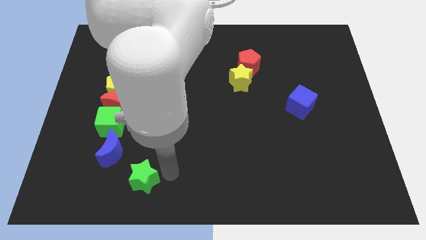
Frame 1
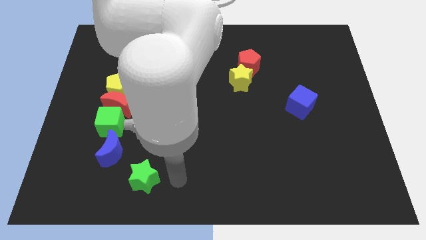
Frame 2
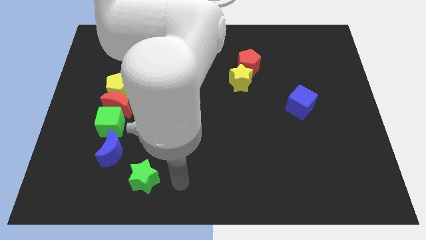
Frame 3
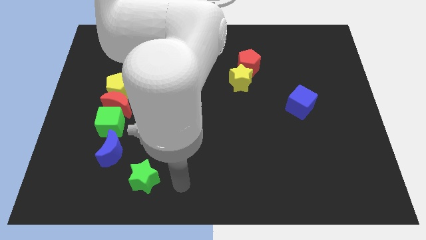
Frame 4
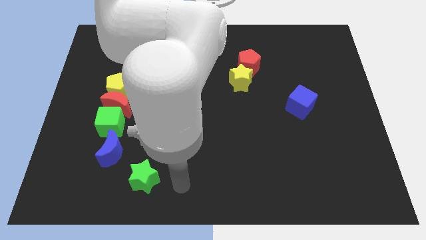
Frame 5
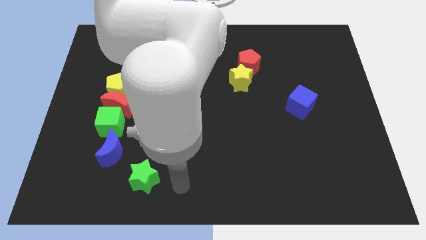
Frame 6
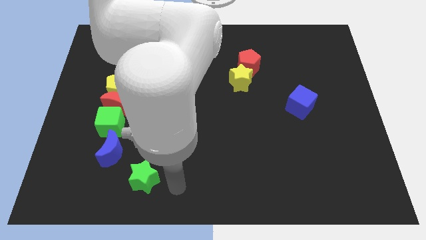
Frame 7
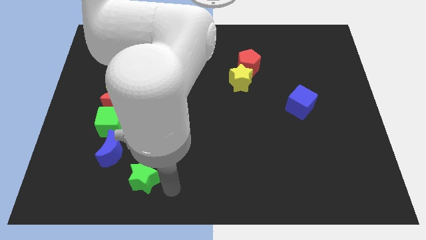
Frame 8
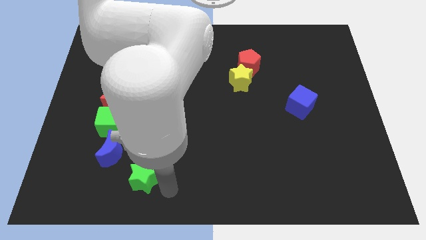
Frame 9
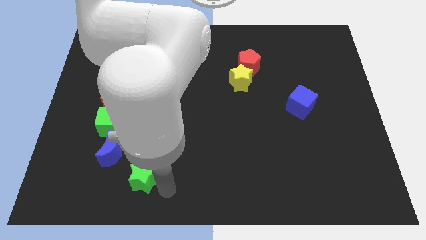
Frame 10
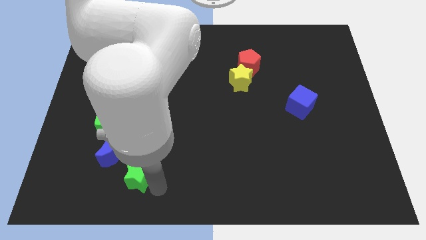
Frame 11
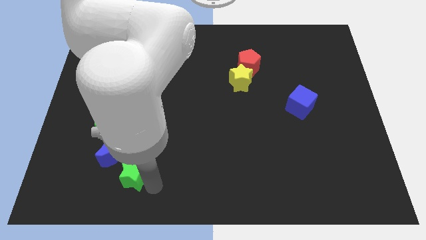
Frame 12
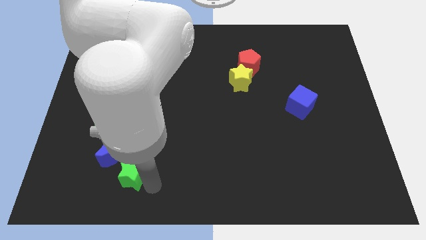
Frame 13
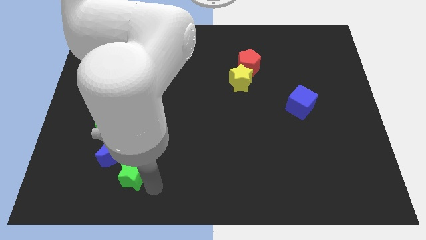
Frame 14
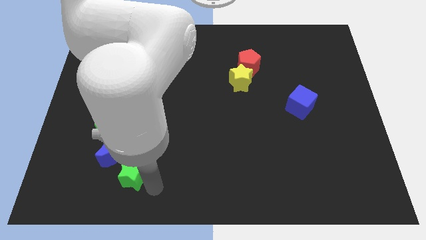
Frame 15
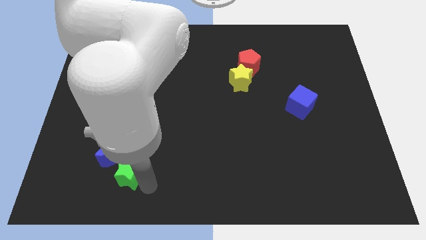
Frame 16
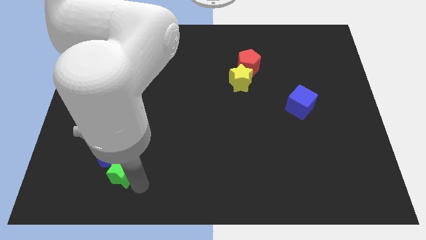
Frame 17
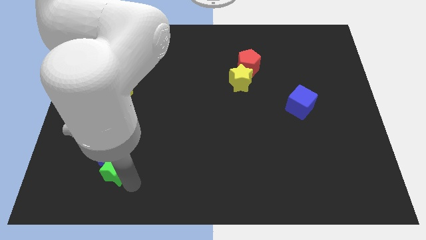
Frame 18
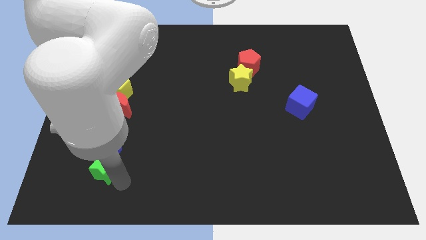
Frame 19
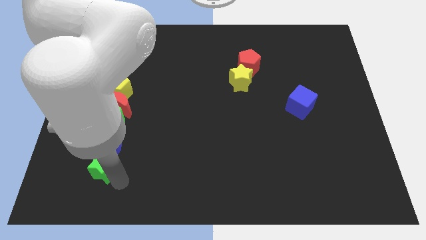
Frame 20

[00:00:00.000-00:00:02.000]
move the green star towards down to the blue crescent

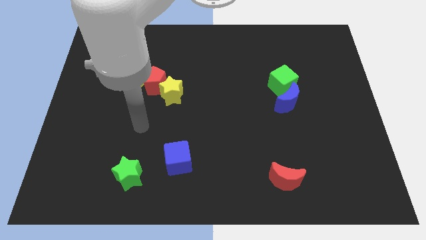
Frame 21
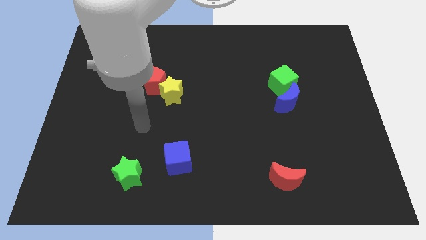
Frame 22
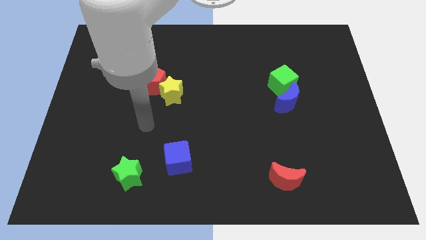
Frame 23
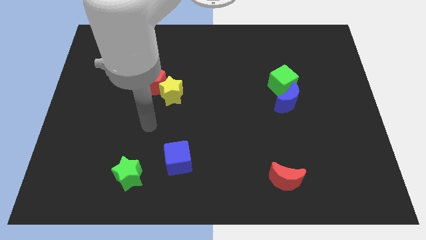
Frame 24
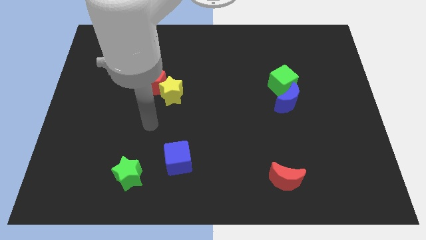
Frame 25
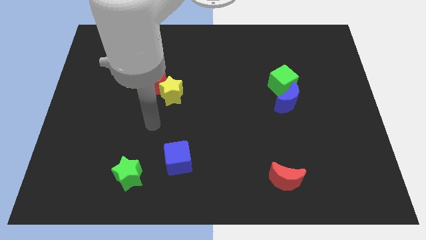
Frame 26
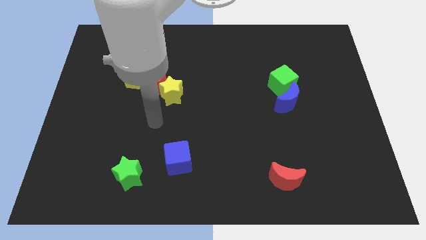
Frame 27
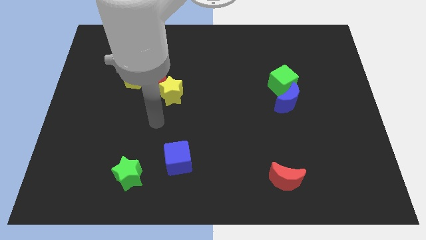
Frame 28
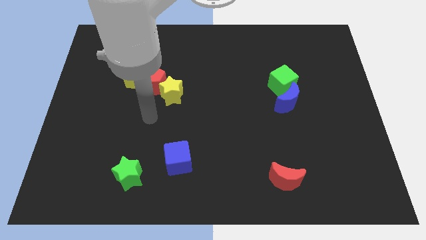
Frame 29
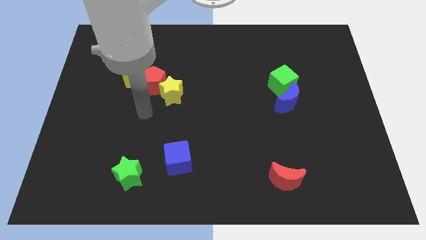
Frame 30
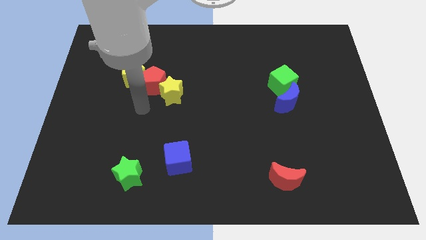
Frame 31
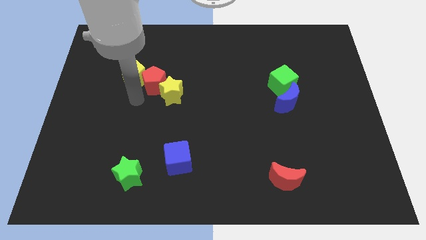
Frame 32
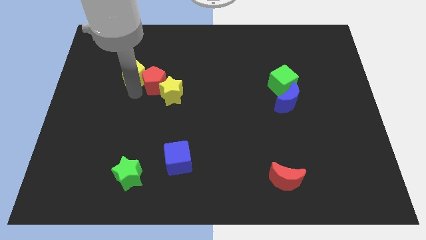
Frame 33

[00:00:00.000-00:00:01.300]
move your arm towards the yellow pentagon

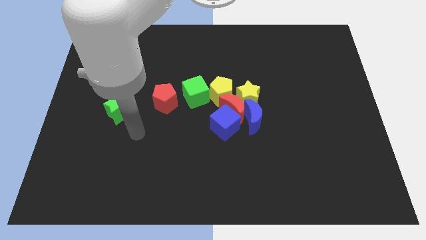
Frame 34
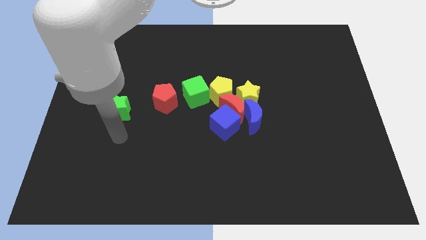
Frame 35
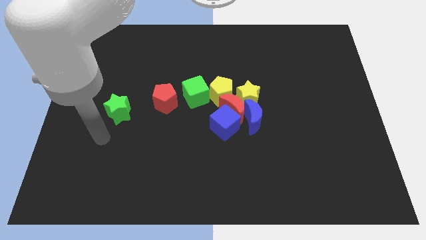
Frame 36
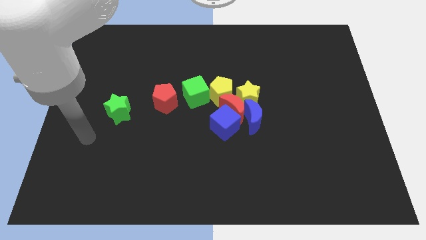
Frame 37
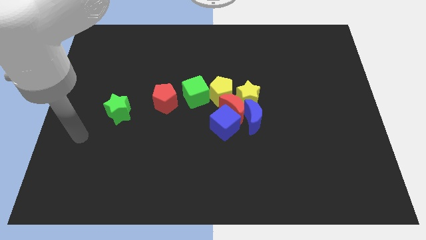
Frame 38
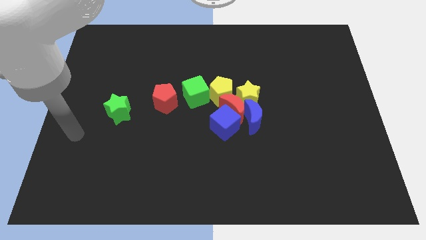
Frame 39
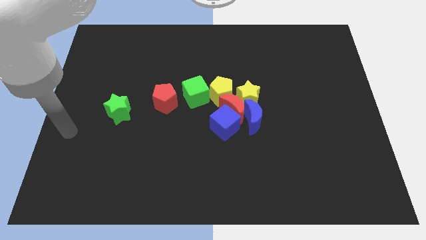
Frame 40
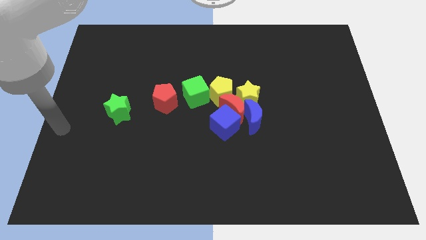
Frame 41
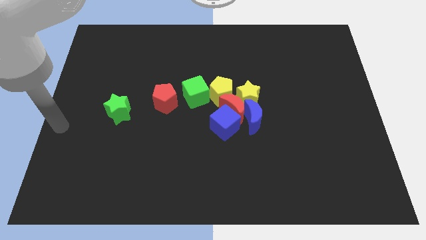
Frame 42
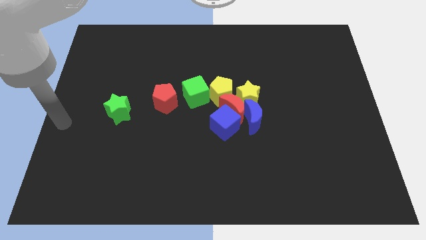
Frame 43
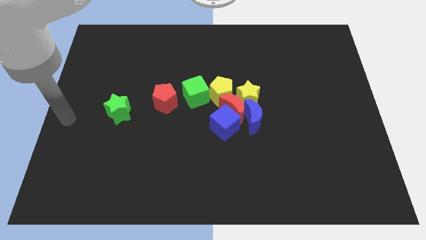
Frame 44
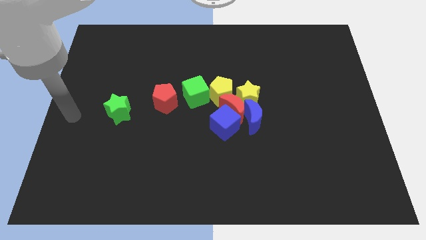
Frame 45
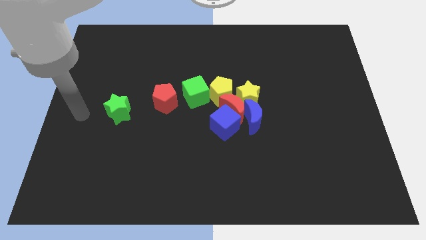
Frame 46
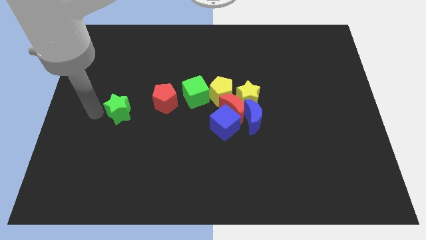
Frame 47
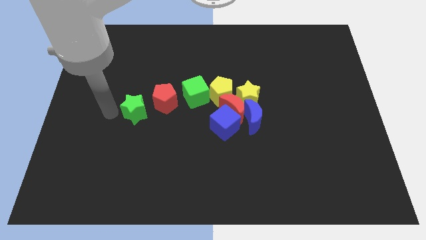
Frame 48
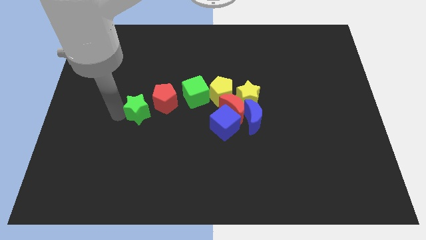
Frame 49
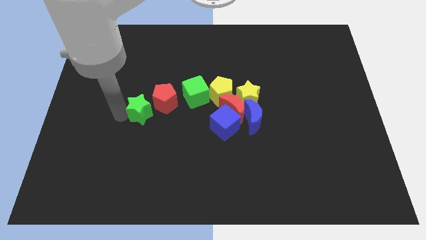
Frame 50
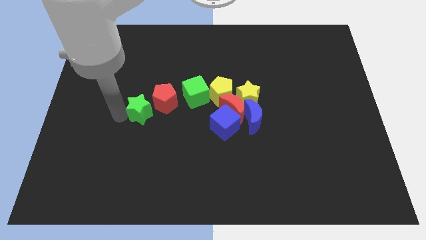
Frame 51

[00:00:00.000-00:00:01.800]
drag the green star close to the left side of the red pentagon

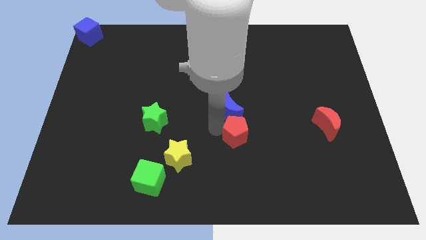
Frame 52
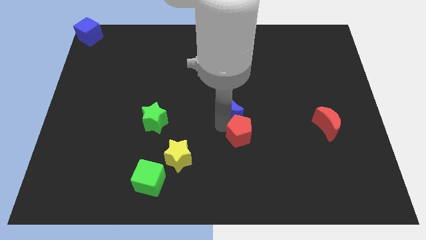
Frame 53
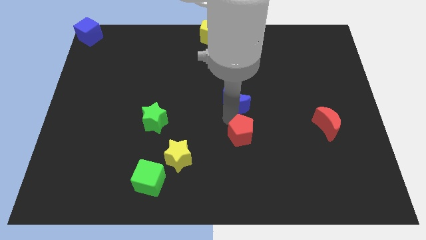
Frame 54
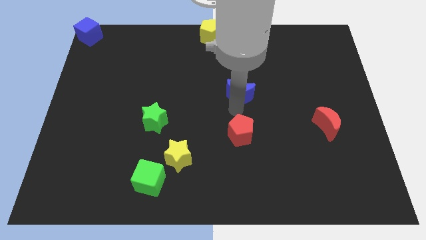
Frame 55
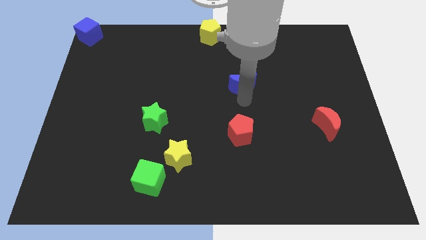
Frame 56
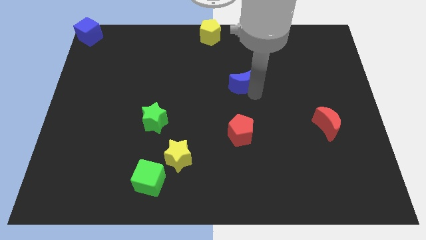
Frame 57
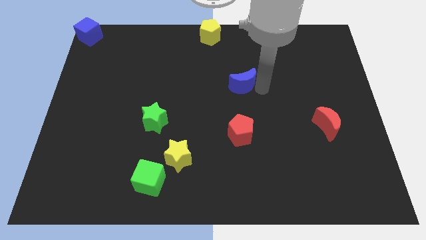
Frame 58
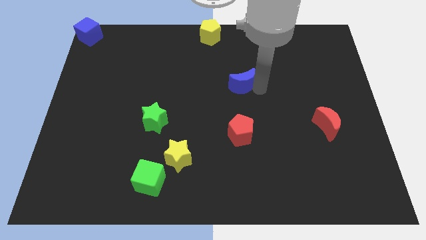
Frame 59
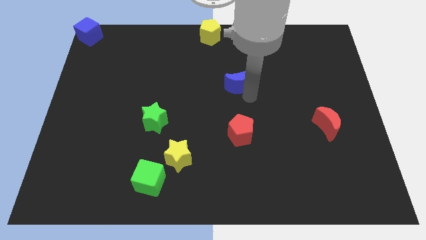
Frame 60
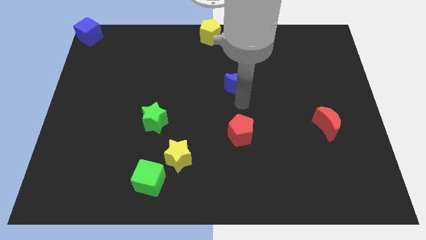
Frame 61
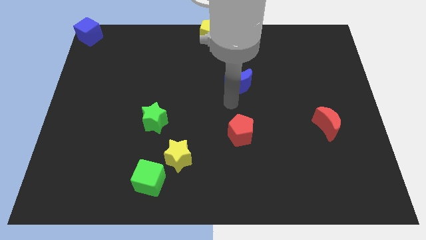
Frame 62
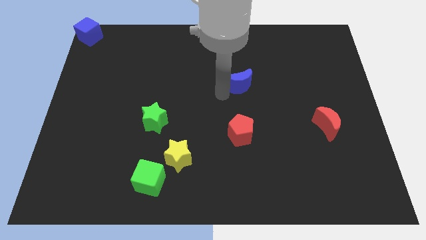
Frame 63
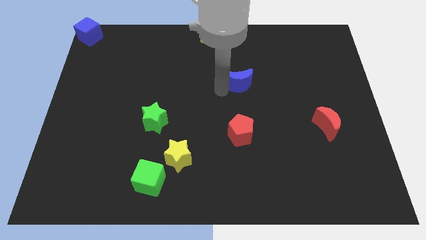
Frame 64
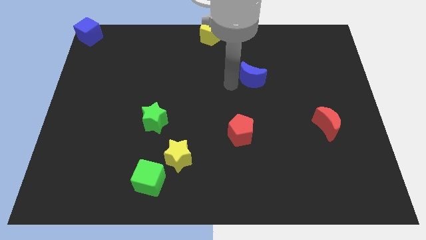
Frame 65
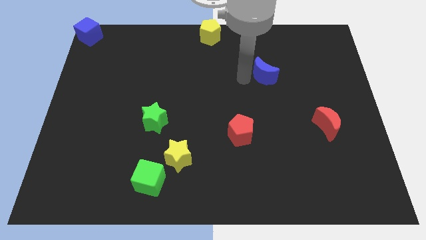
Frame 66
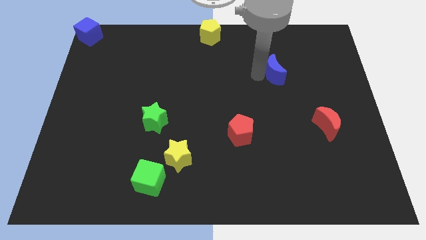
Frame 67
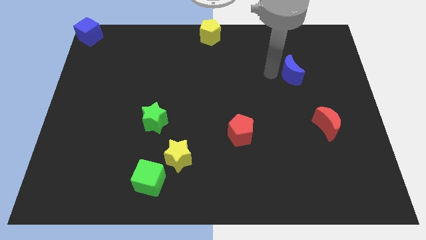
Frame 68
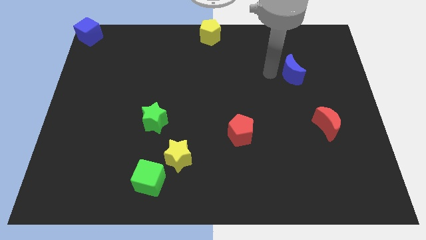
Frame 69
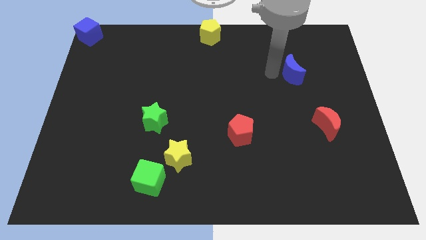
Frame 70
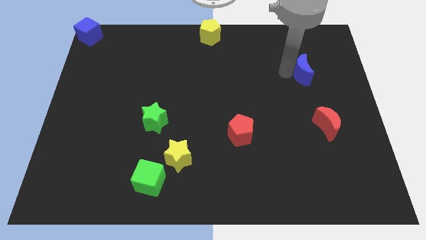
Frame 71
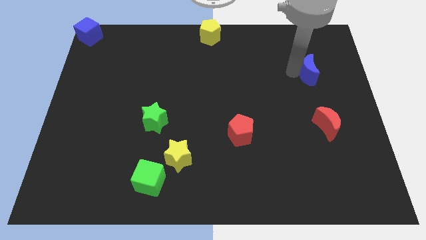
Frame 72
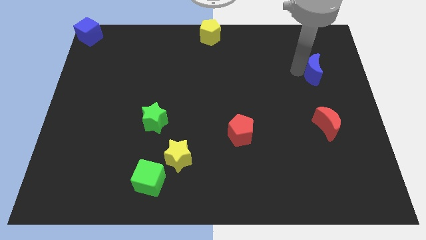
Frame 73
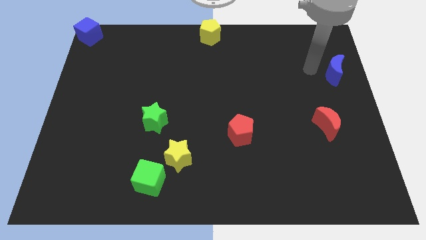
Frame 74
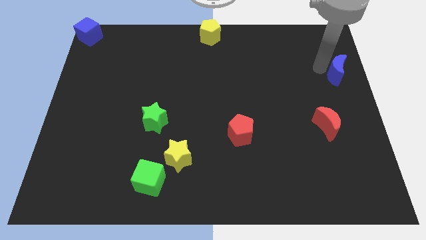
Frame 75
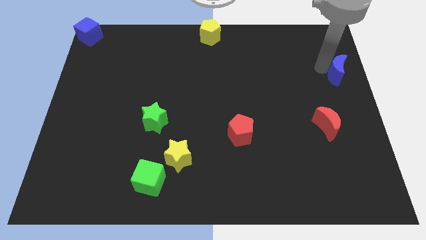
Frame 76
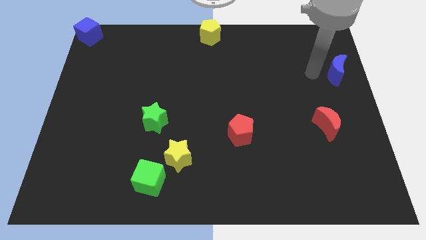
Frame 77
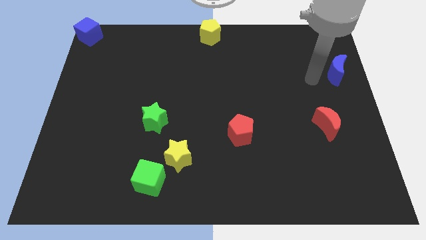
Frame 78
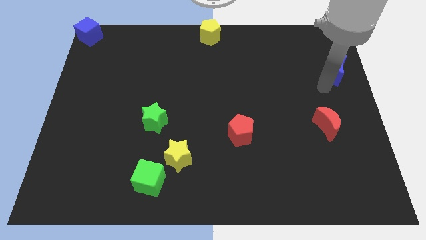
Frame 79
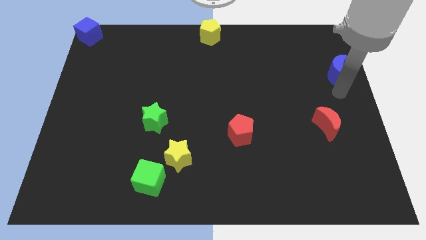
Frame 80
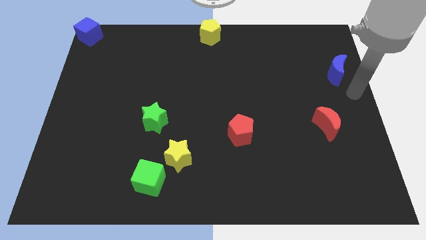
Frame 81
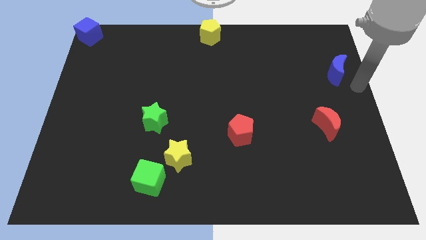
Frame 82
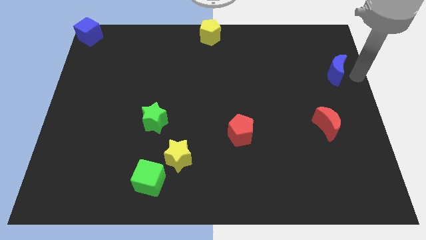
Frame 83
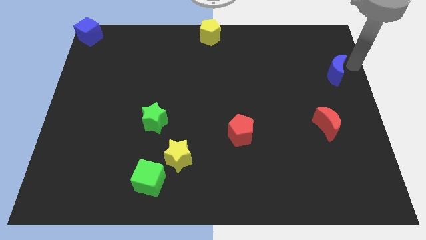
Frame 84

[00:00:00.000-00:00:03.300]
move the blue moon away from the red pentagon

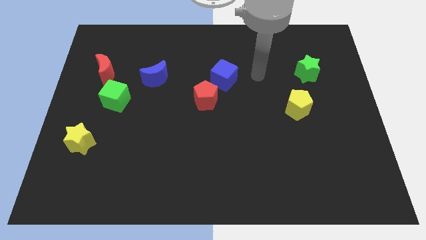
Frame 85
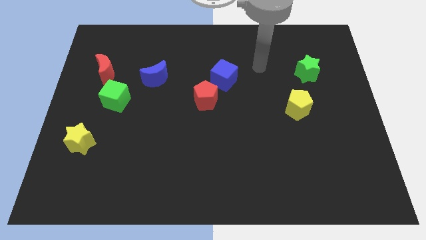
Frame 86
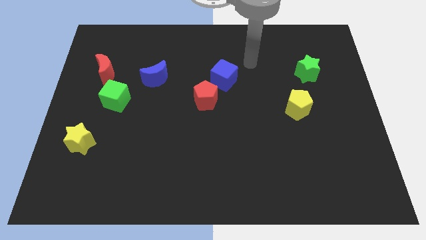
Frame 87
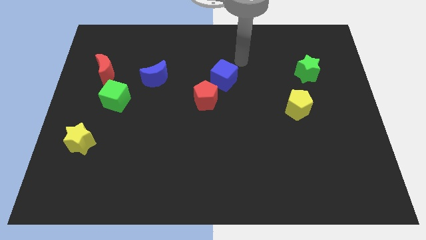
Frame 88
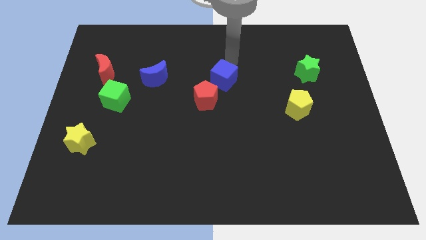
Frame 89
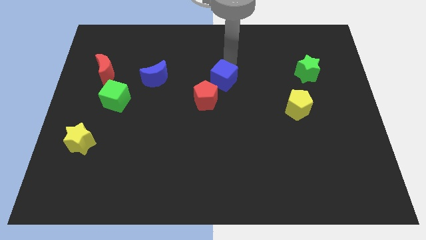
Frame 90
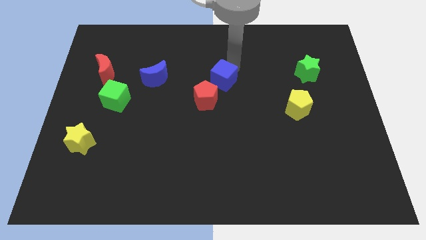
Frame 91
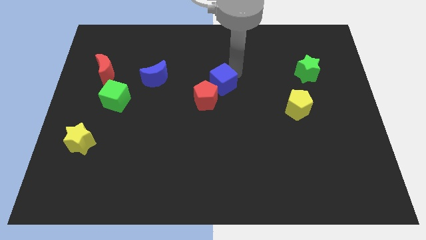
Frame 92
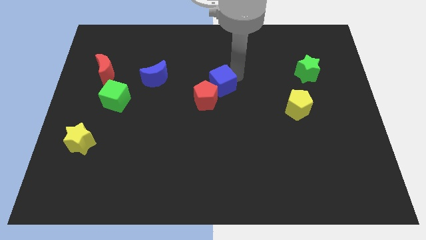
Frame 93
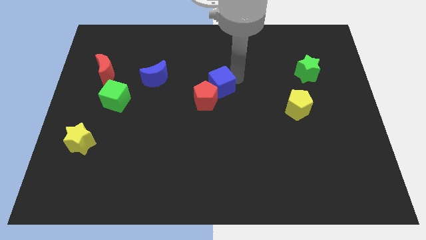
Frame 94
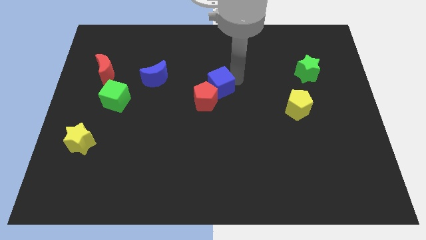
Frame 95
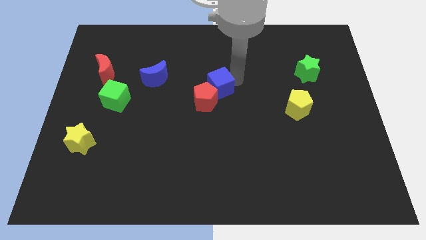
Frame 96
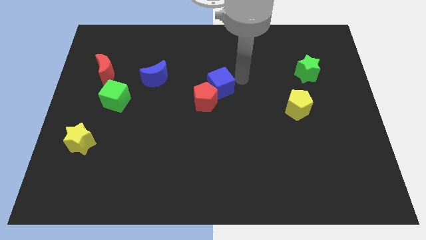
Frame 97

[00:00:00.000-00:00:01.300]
move the blue cube into the red pentagon
